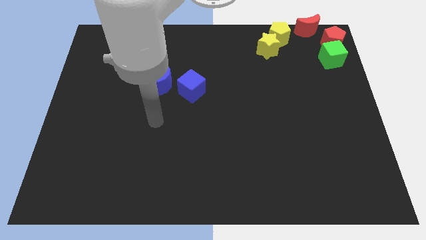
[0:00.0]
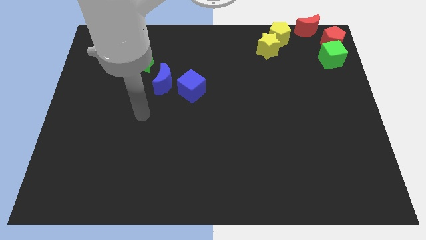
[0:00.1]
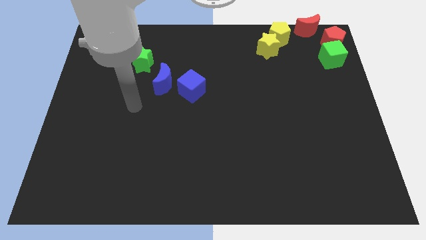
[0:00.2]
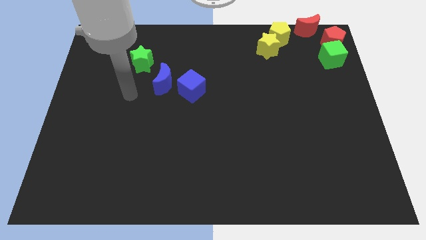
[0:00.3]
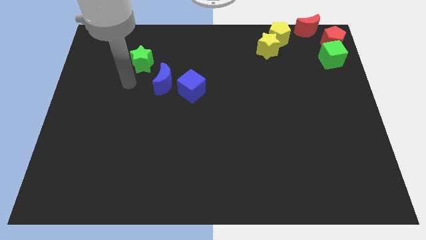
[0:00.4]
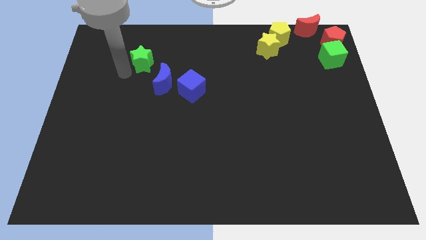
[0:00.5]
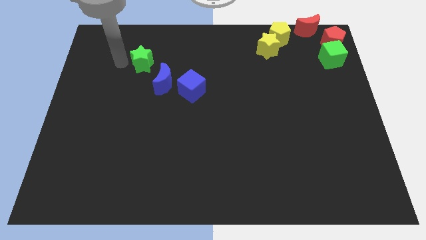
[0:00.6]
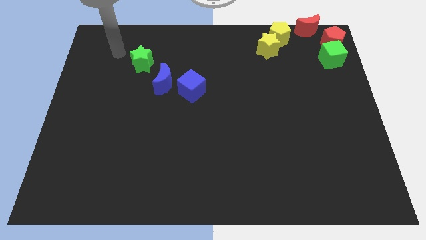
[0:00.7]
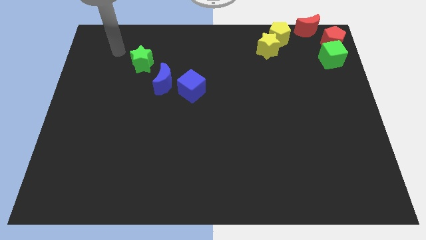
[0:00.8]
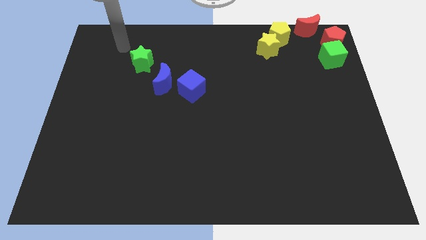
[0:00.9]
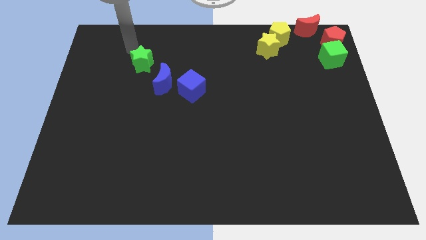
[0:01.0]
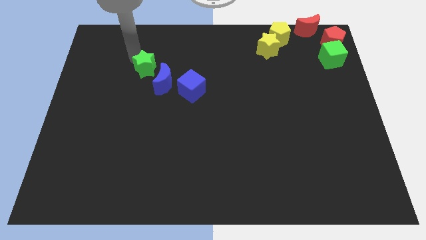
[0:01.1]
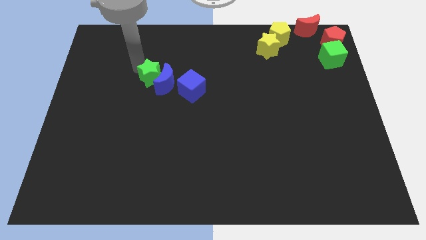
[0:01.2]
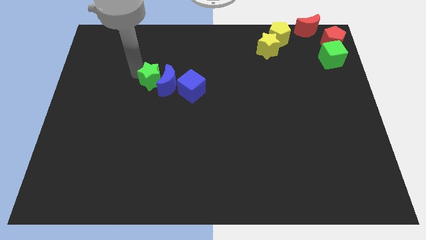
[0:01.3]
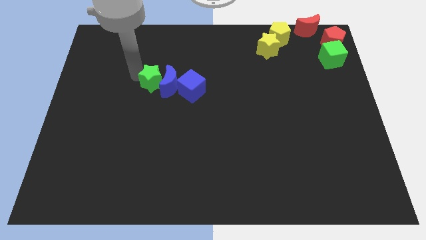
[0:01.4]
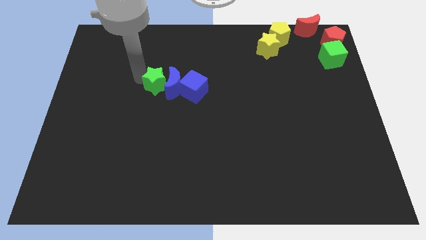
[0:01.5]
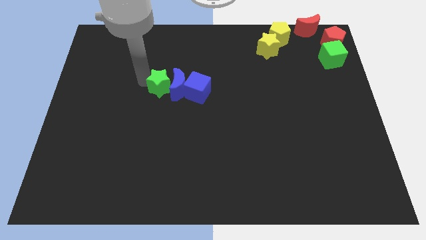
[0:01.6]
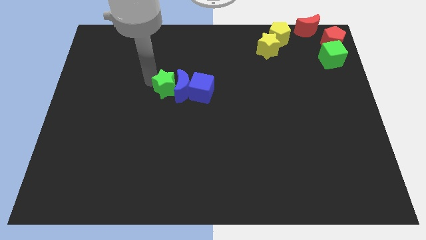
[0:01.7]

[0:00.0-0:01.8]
push the green star into blue moon to the left

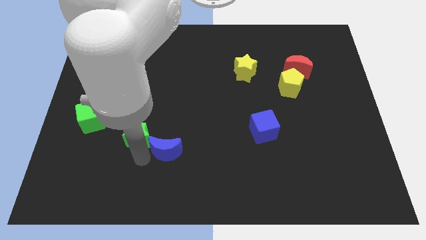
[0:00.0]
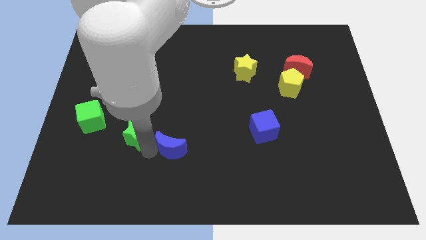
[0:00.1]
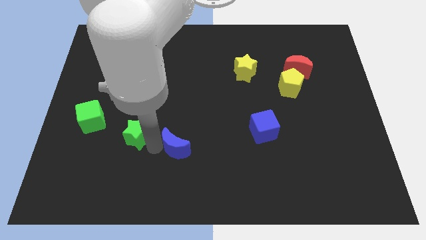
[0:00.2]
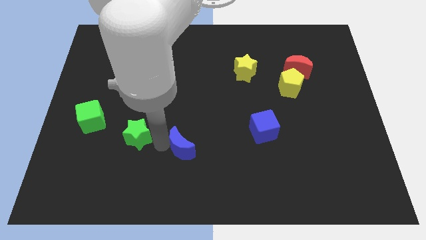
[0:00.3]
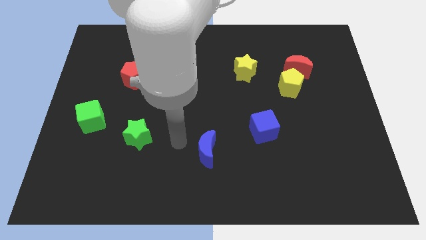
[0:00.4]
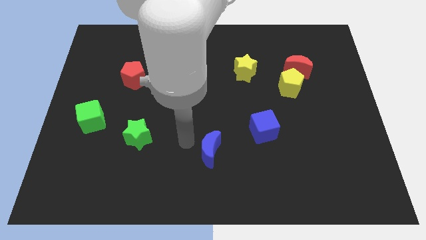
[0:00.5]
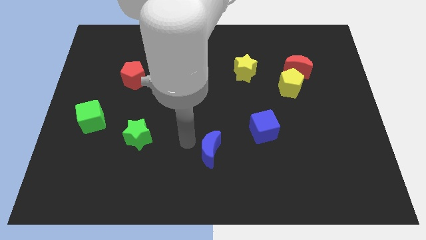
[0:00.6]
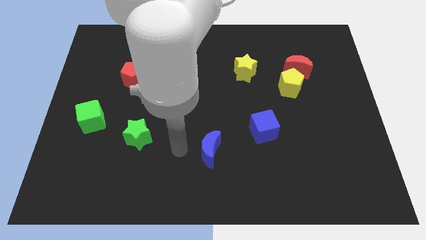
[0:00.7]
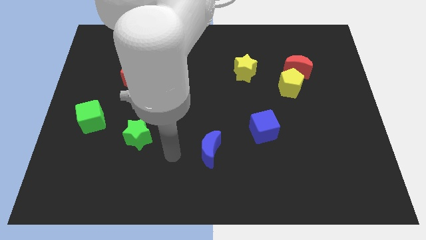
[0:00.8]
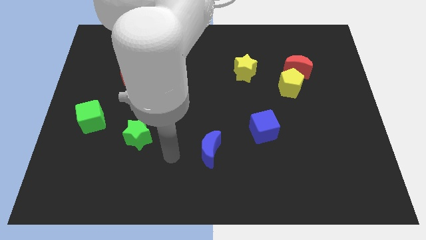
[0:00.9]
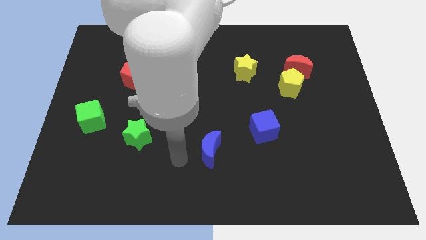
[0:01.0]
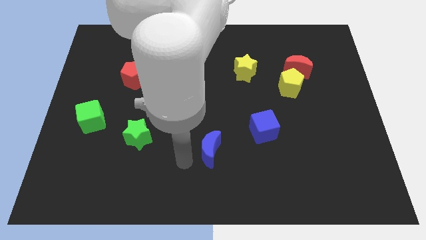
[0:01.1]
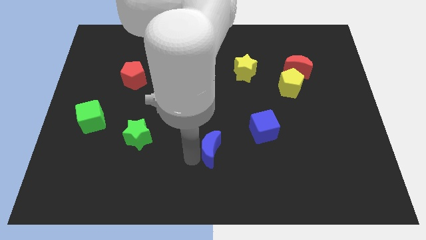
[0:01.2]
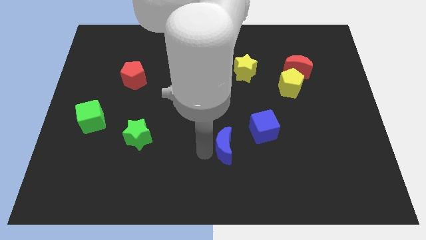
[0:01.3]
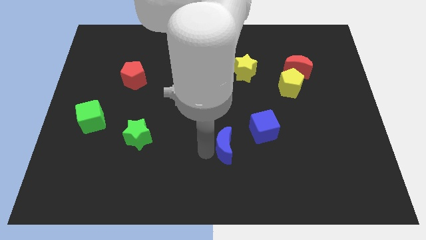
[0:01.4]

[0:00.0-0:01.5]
separate green star and the blue moon

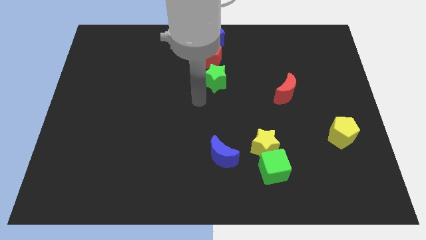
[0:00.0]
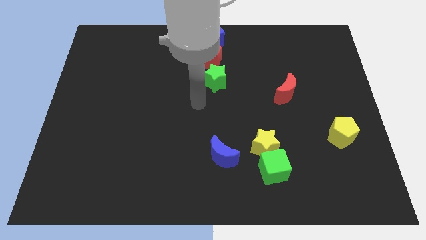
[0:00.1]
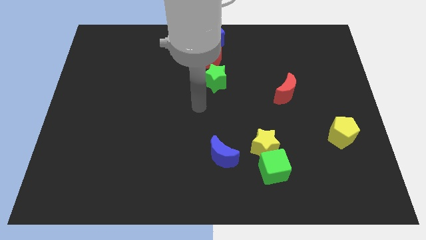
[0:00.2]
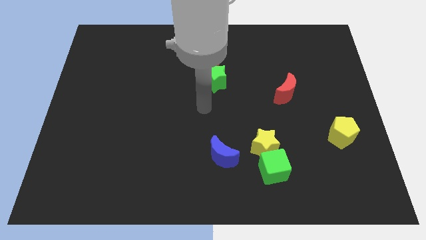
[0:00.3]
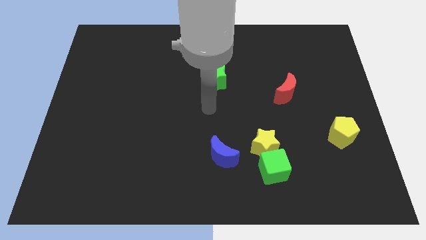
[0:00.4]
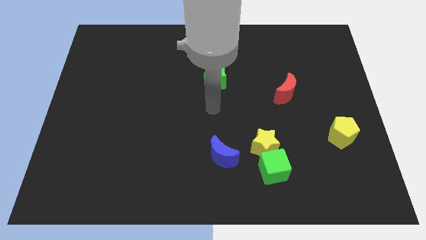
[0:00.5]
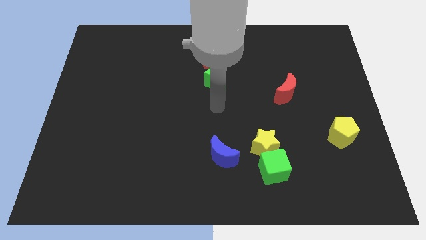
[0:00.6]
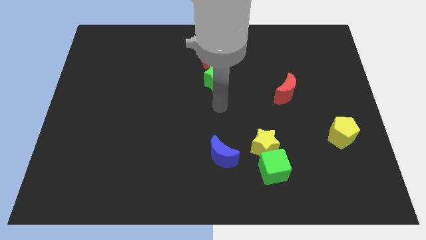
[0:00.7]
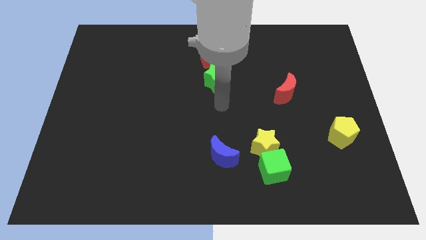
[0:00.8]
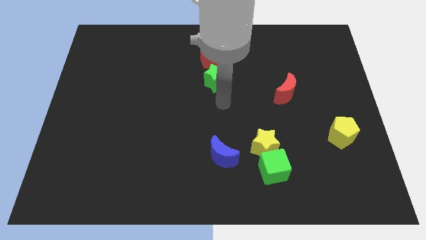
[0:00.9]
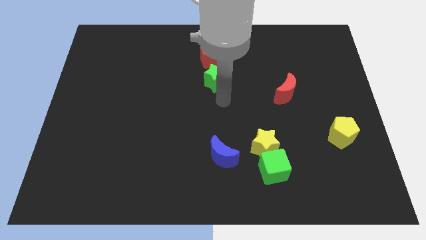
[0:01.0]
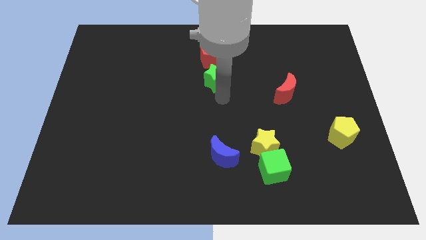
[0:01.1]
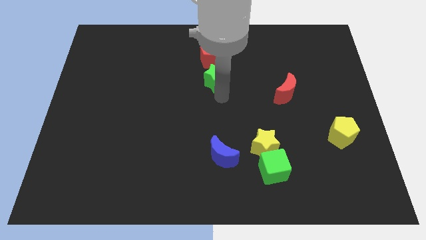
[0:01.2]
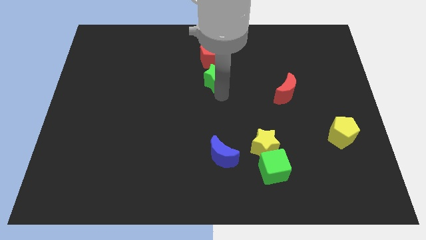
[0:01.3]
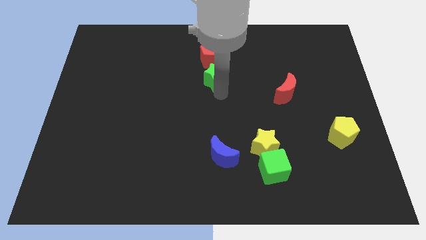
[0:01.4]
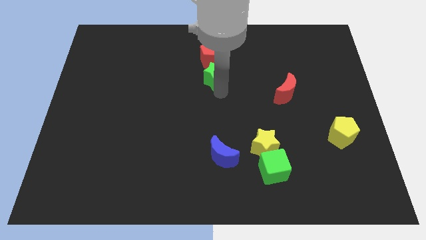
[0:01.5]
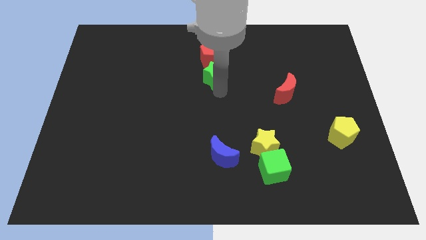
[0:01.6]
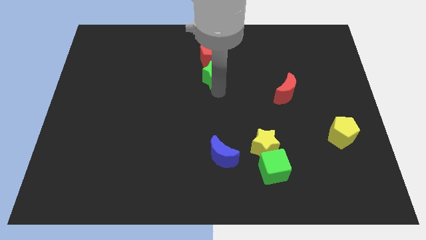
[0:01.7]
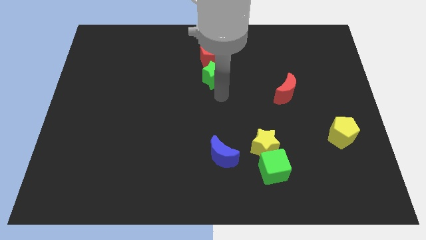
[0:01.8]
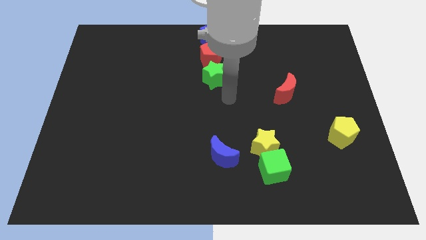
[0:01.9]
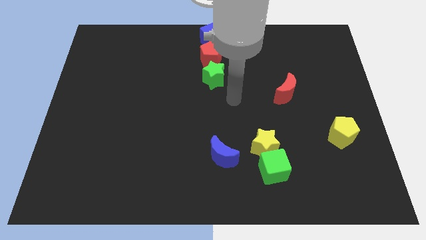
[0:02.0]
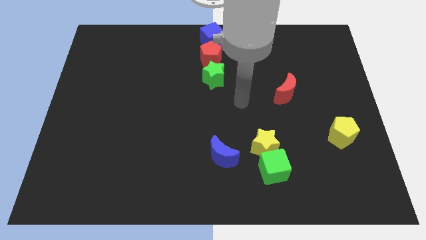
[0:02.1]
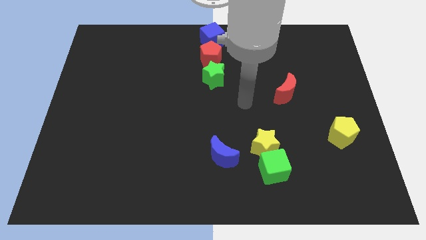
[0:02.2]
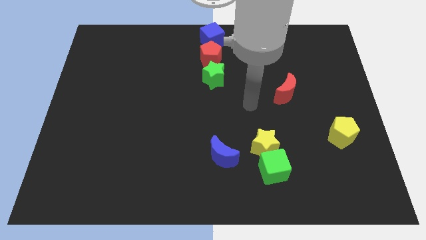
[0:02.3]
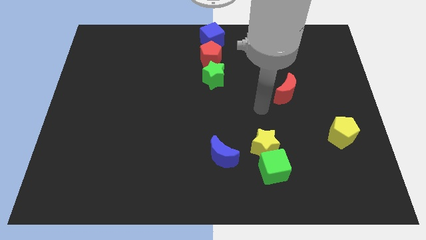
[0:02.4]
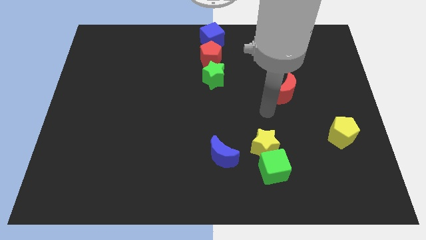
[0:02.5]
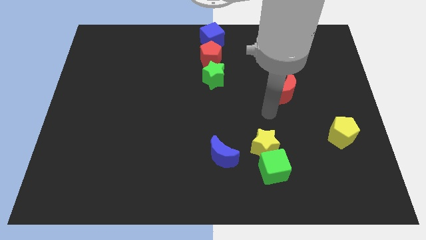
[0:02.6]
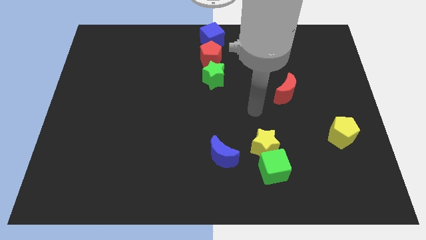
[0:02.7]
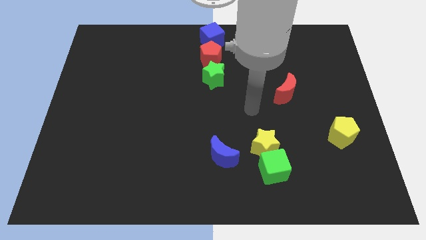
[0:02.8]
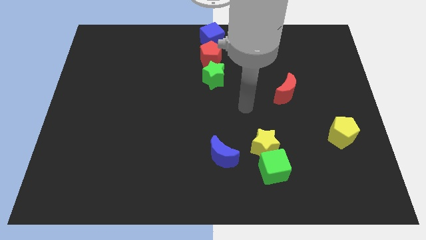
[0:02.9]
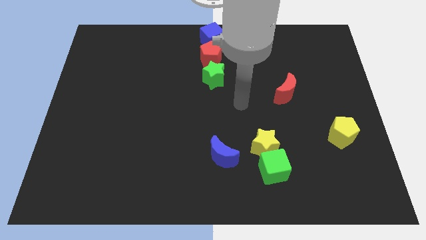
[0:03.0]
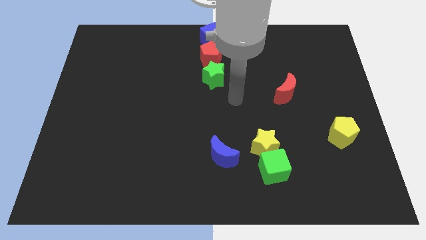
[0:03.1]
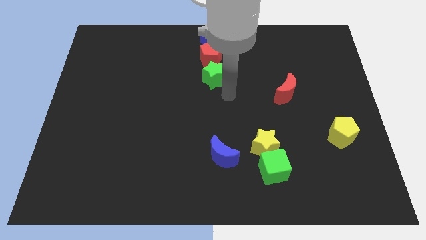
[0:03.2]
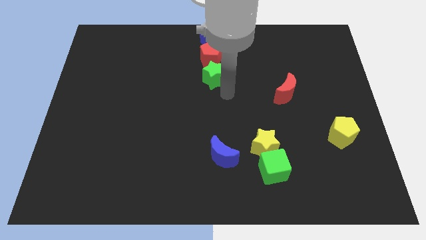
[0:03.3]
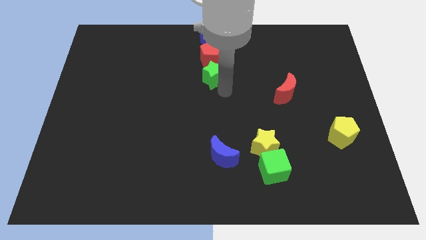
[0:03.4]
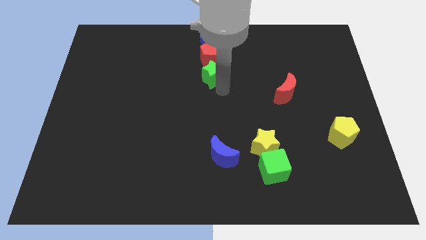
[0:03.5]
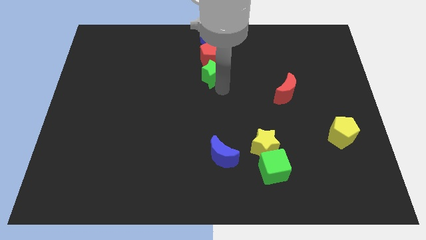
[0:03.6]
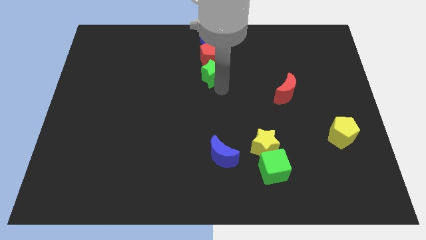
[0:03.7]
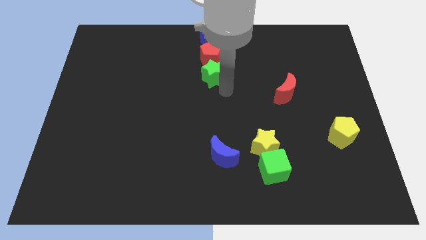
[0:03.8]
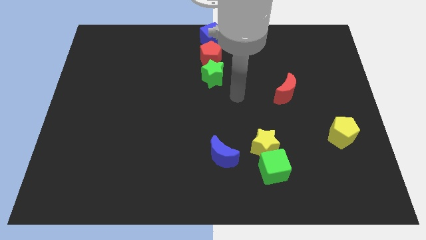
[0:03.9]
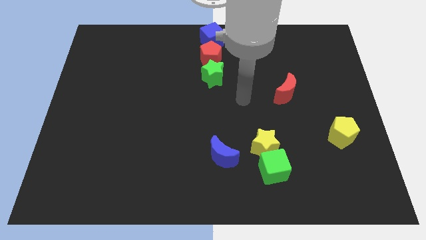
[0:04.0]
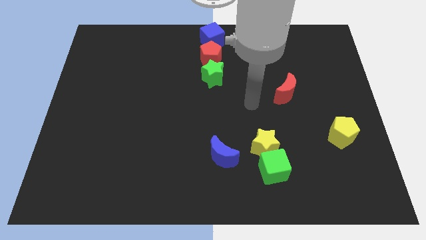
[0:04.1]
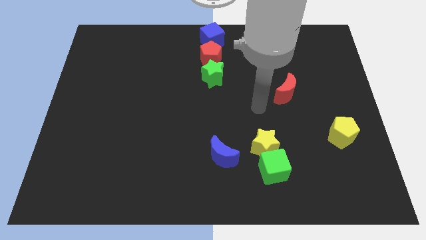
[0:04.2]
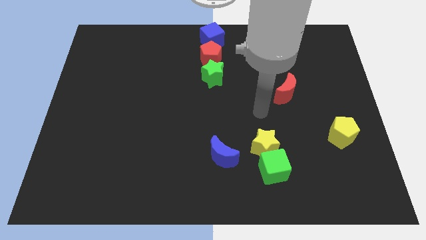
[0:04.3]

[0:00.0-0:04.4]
move the green star into the red pentagon

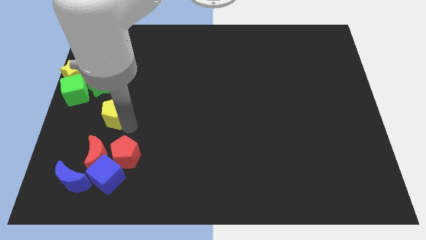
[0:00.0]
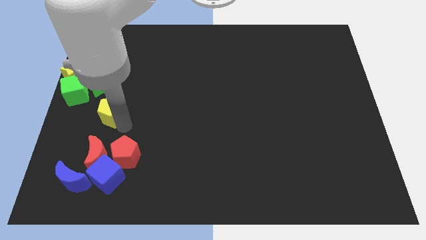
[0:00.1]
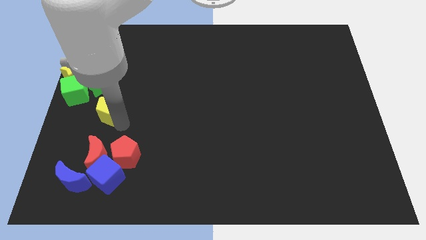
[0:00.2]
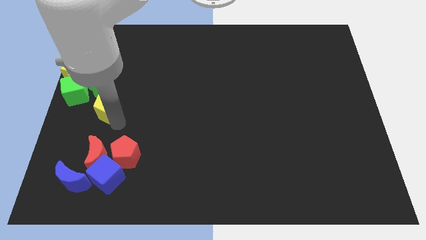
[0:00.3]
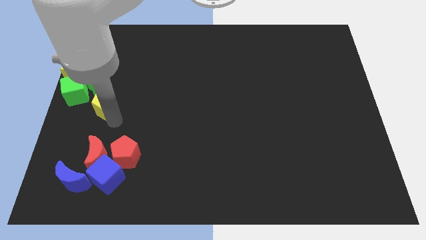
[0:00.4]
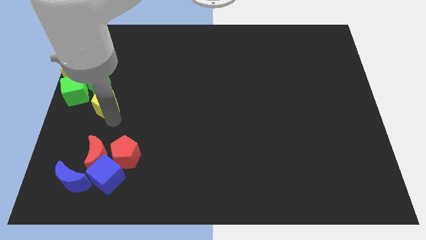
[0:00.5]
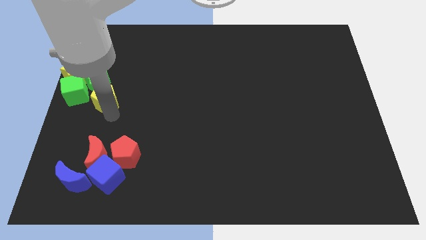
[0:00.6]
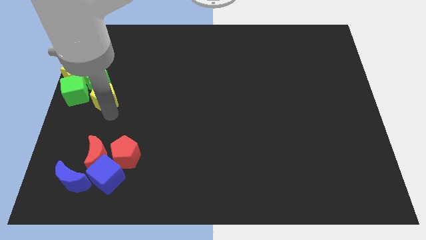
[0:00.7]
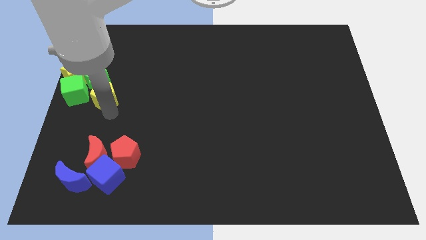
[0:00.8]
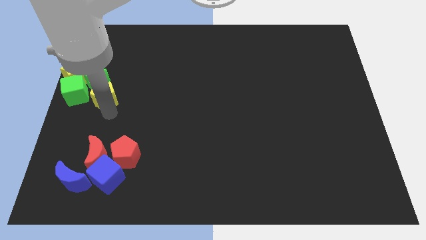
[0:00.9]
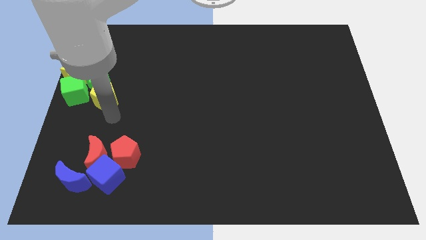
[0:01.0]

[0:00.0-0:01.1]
move the yellow pentagon into the bottom side of the green star

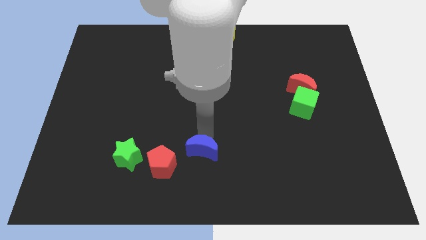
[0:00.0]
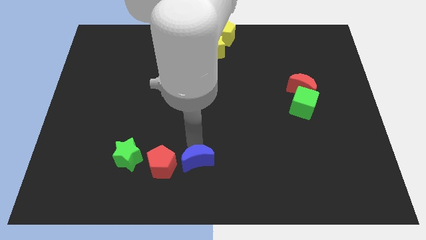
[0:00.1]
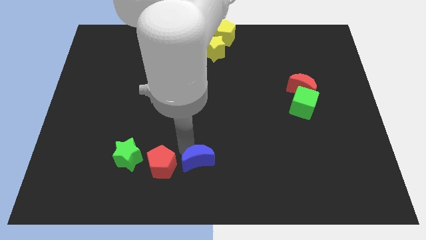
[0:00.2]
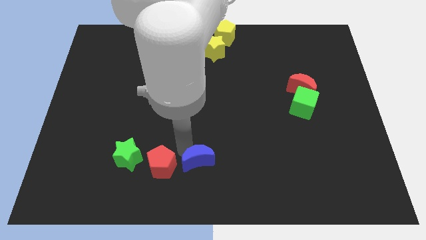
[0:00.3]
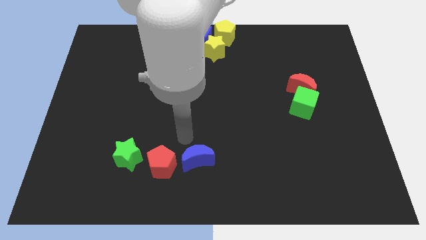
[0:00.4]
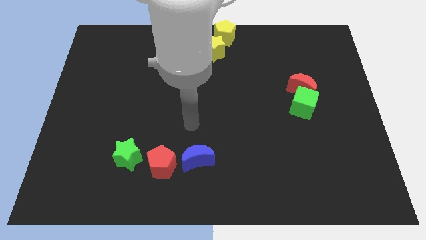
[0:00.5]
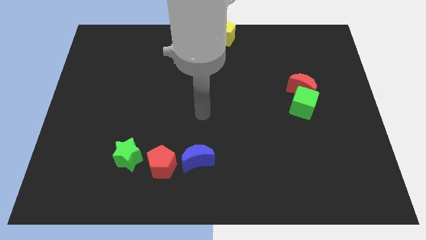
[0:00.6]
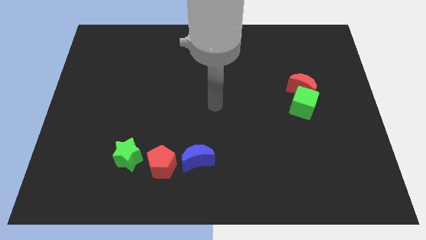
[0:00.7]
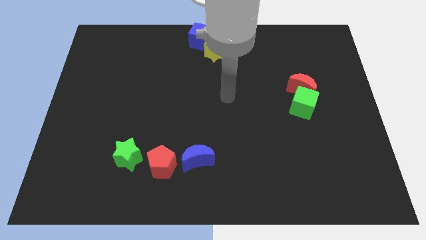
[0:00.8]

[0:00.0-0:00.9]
push blue crescent to the right side of red pentagon
